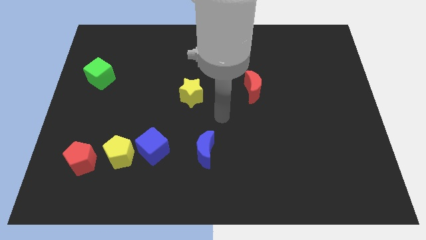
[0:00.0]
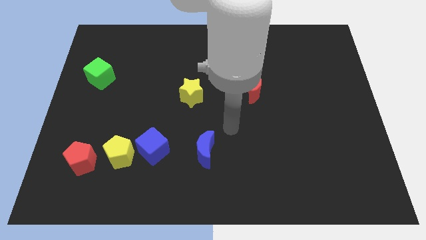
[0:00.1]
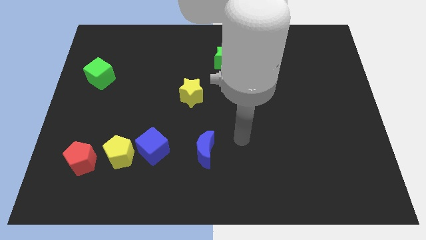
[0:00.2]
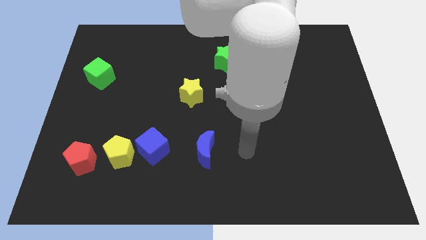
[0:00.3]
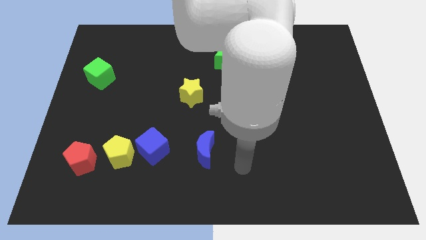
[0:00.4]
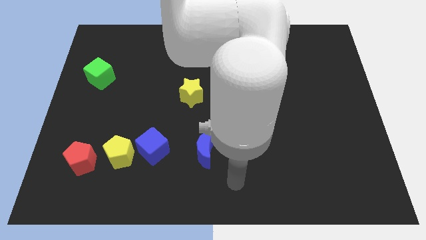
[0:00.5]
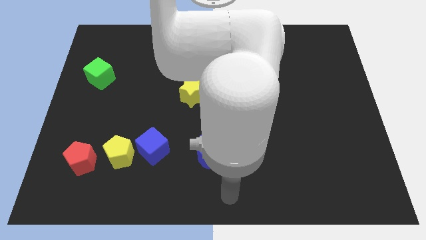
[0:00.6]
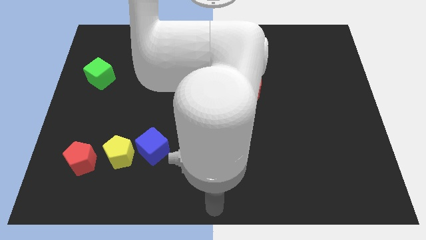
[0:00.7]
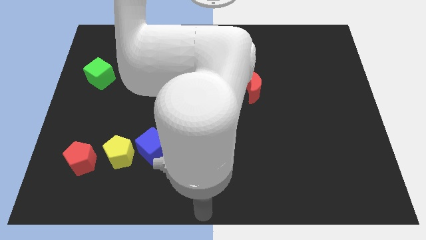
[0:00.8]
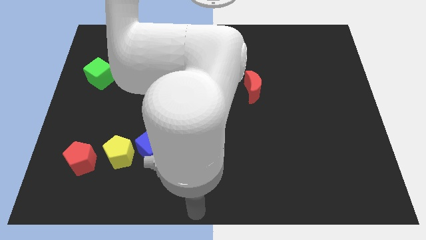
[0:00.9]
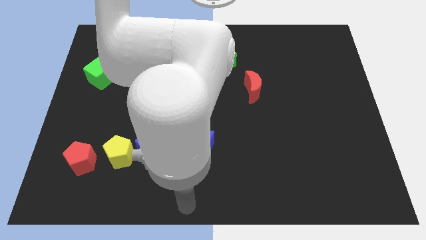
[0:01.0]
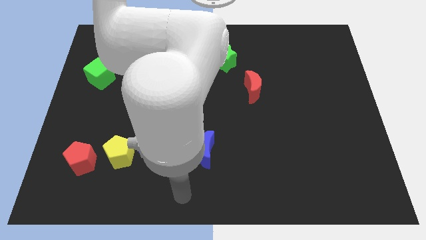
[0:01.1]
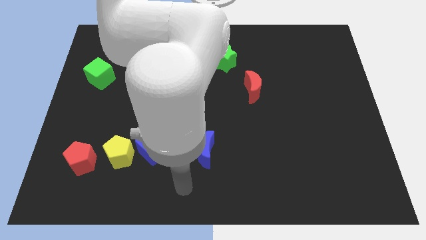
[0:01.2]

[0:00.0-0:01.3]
move your arm to the bottom center of the board

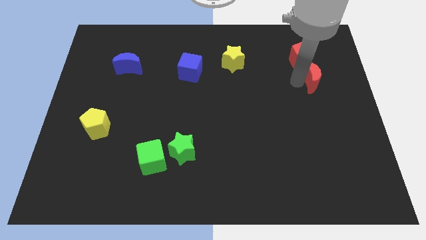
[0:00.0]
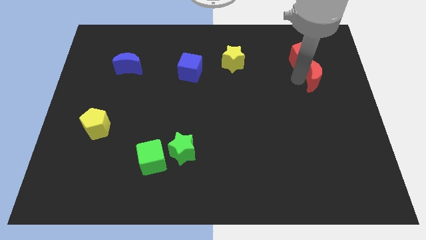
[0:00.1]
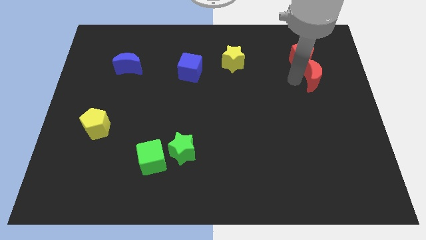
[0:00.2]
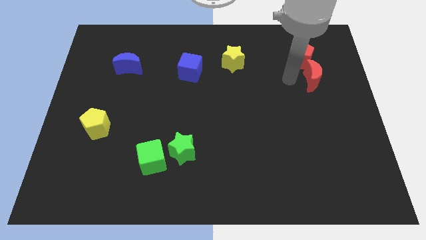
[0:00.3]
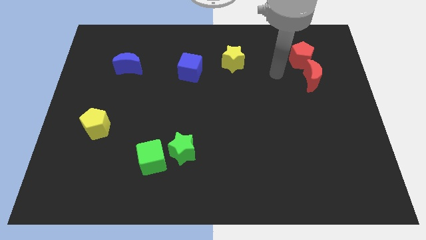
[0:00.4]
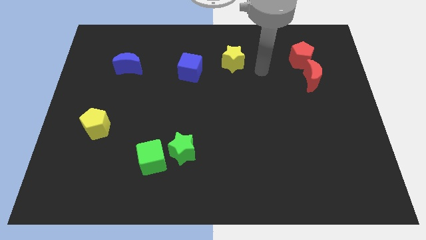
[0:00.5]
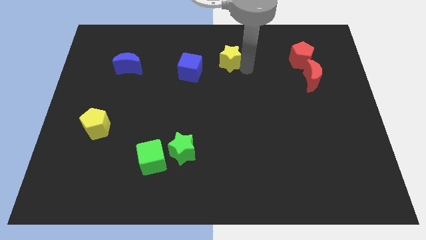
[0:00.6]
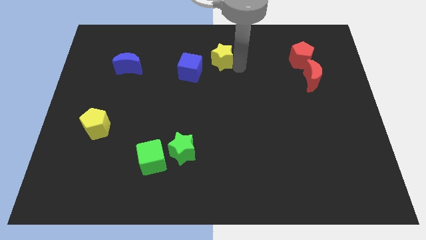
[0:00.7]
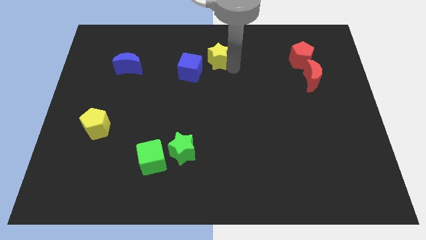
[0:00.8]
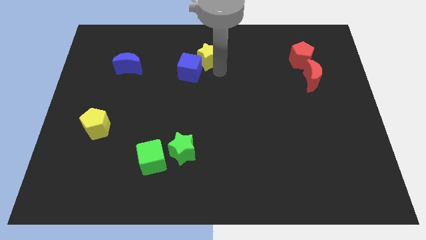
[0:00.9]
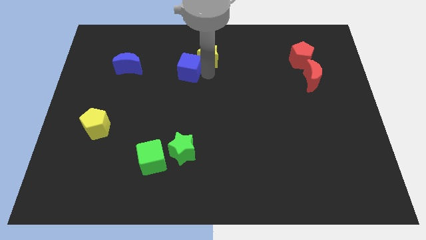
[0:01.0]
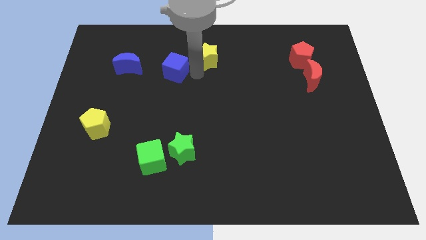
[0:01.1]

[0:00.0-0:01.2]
place the yellow star above the blue cube

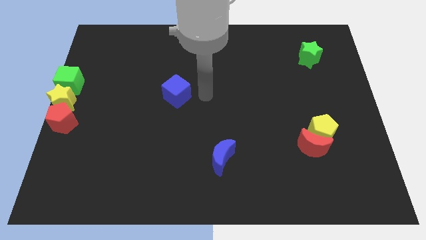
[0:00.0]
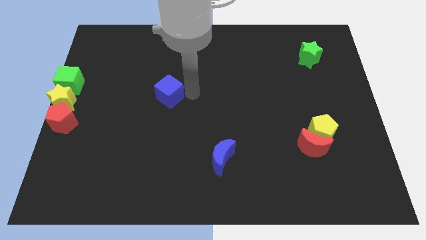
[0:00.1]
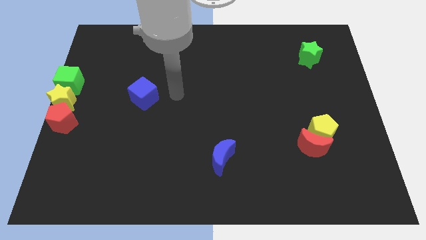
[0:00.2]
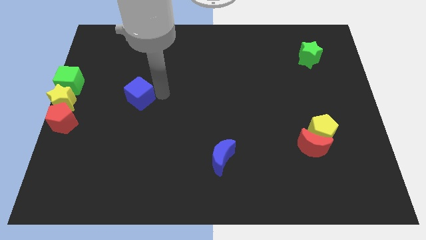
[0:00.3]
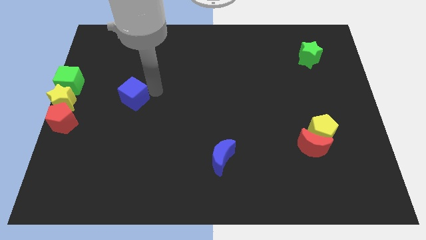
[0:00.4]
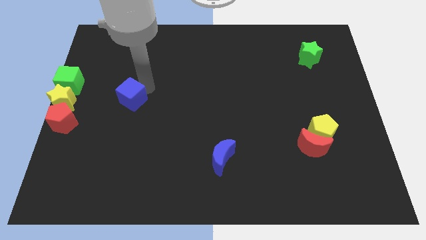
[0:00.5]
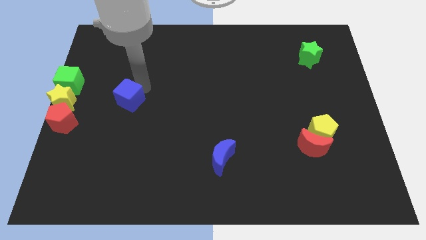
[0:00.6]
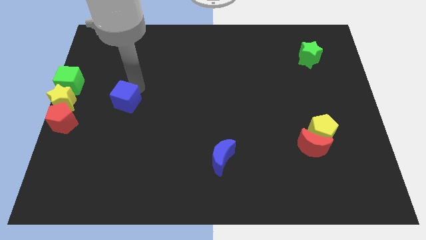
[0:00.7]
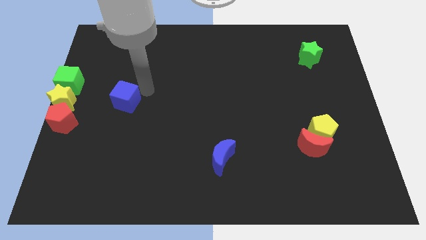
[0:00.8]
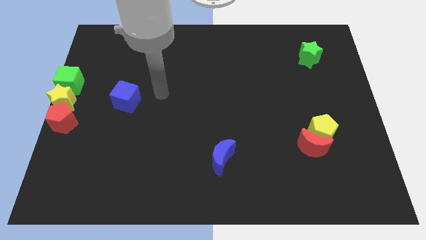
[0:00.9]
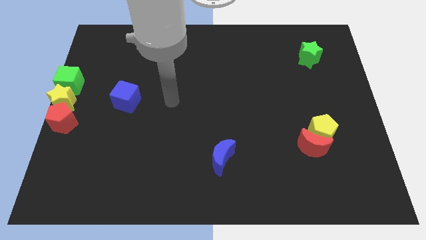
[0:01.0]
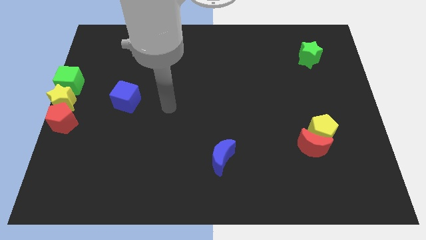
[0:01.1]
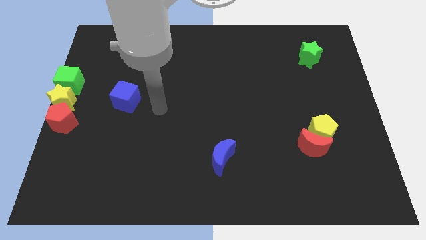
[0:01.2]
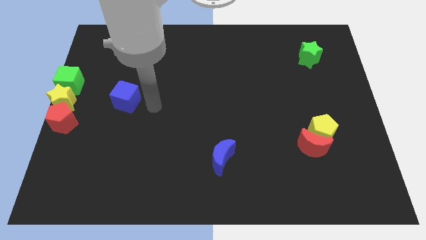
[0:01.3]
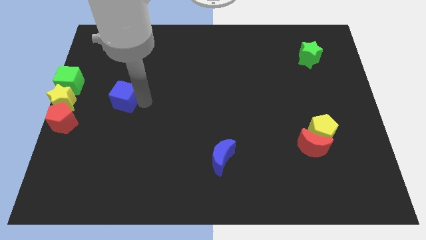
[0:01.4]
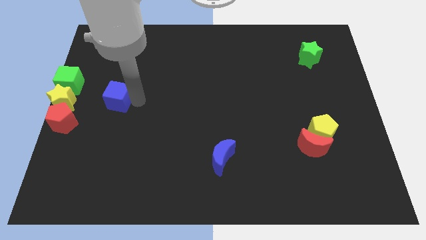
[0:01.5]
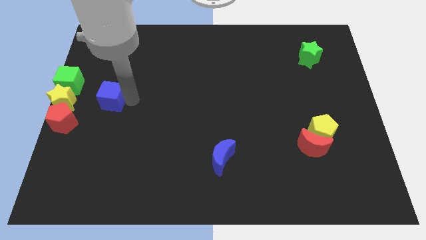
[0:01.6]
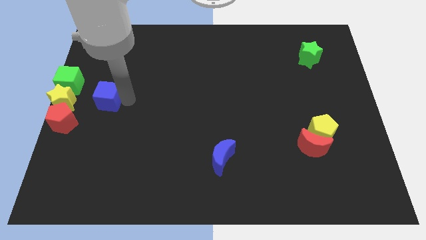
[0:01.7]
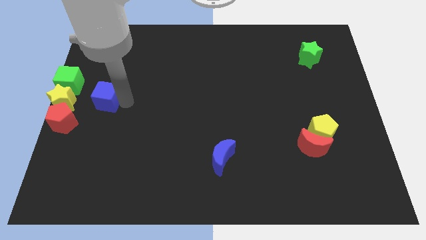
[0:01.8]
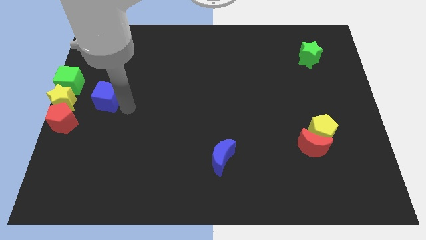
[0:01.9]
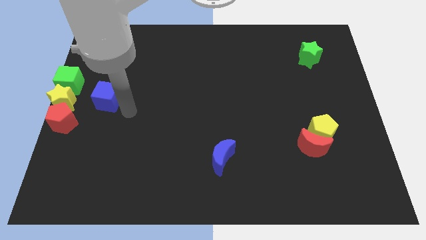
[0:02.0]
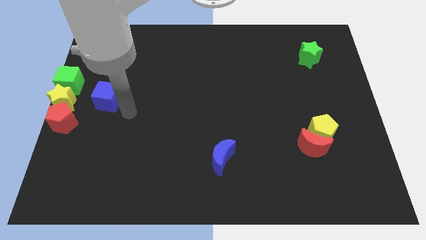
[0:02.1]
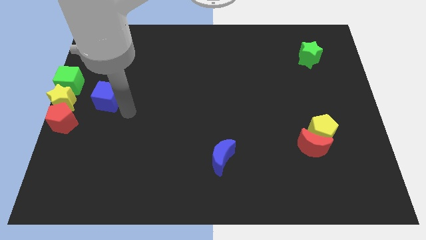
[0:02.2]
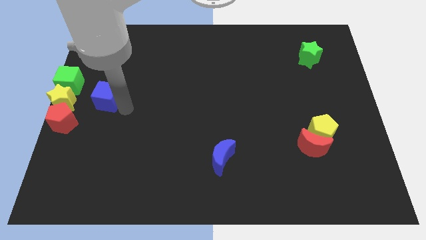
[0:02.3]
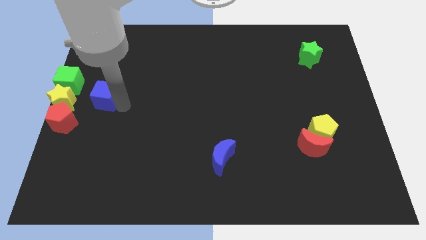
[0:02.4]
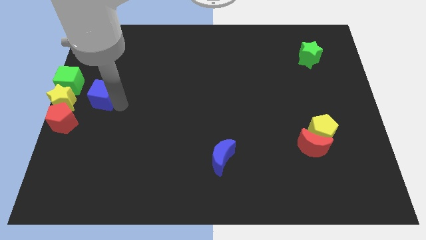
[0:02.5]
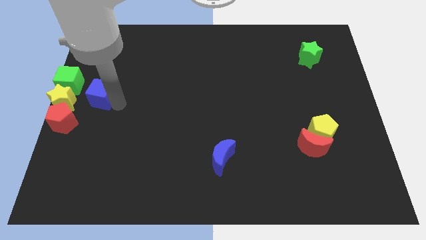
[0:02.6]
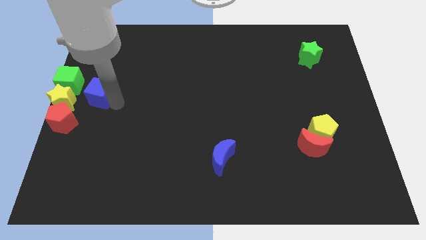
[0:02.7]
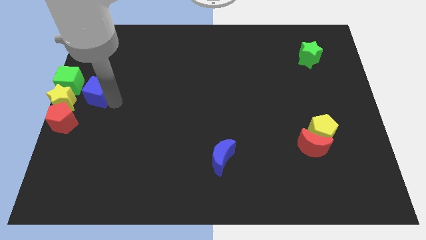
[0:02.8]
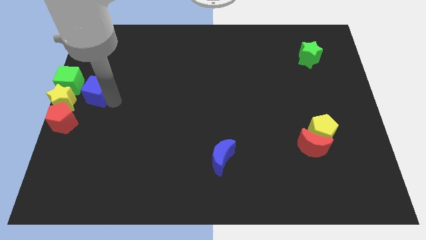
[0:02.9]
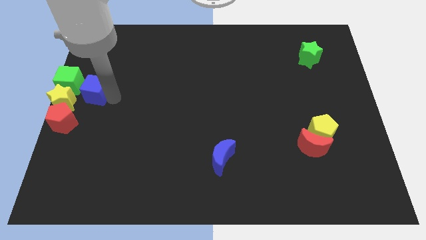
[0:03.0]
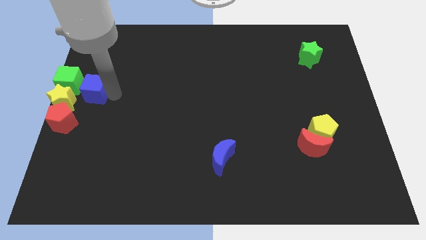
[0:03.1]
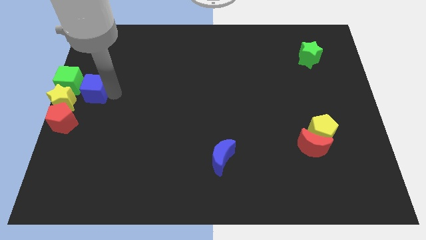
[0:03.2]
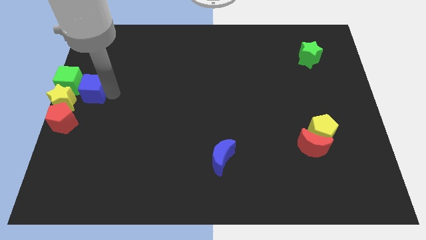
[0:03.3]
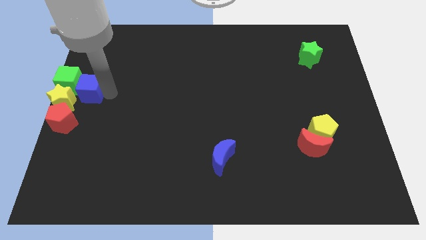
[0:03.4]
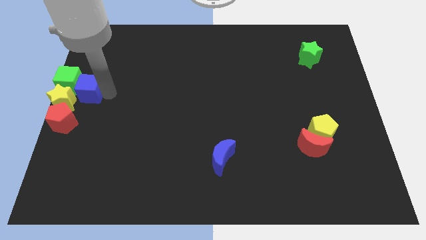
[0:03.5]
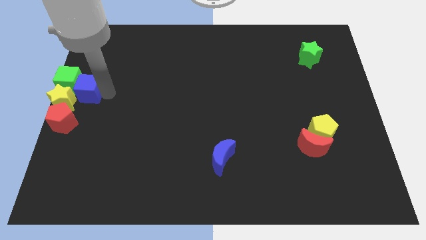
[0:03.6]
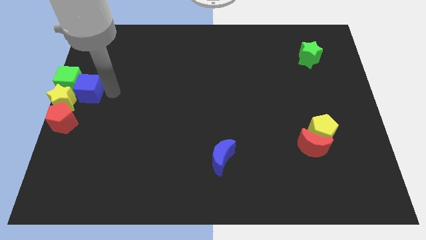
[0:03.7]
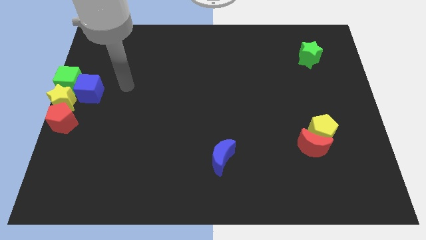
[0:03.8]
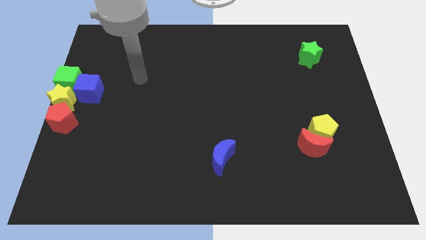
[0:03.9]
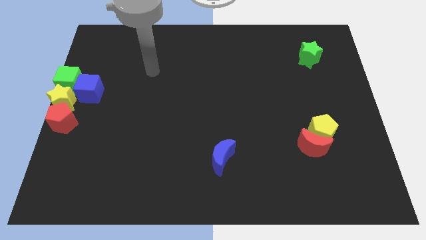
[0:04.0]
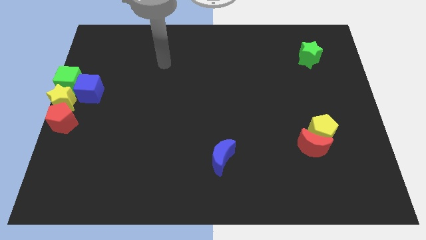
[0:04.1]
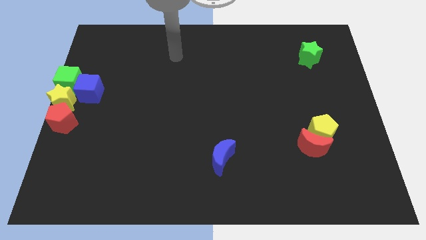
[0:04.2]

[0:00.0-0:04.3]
place the blue cube right to the green cube

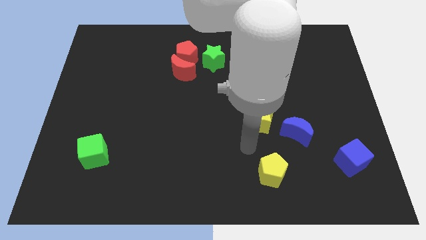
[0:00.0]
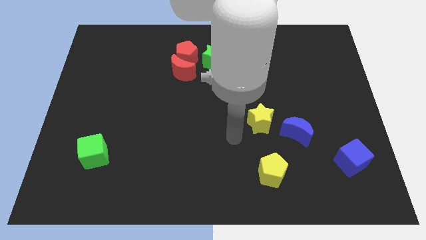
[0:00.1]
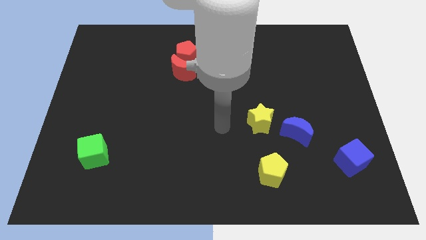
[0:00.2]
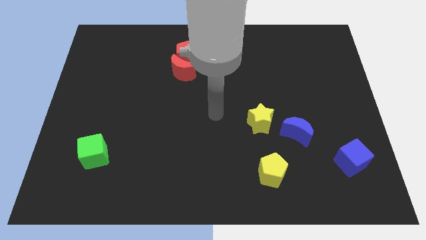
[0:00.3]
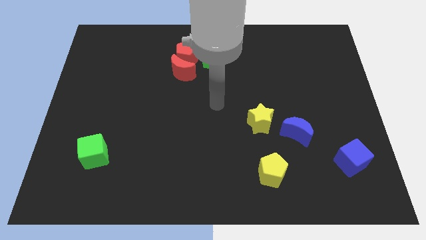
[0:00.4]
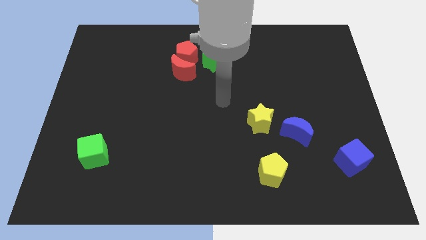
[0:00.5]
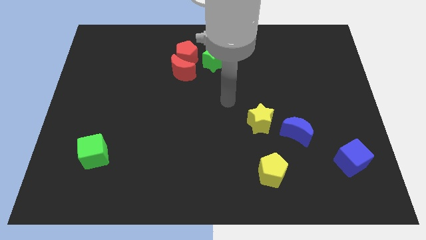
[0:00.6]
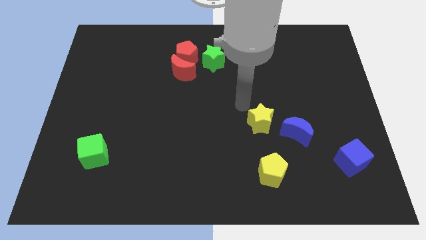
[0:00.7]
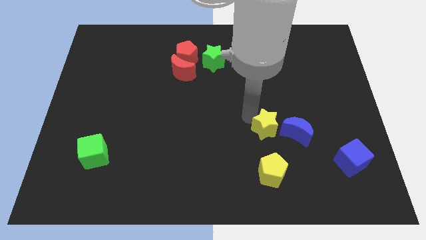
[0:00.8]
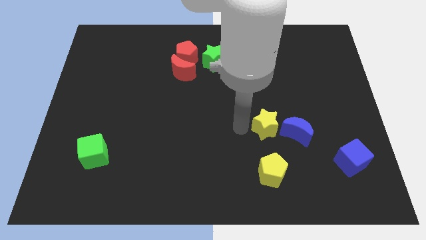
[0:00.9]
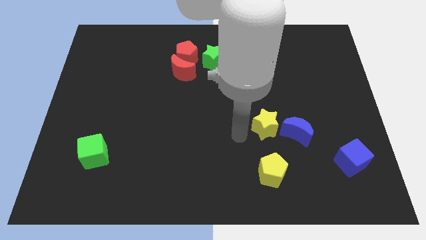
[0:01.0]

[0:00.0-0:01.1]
slide the yellow star close to the blue moon

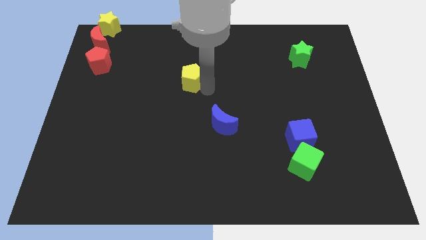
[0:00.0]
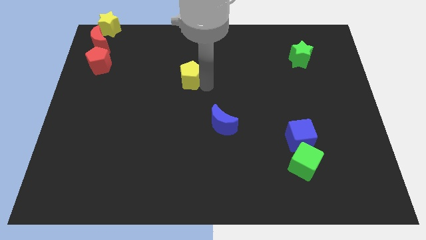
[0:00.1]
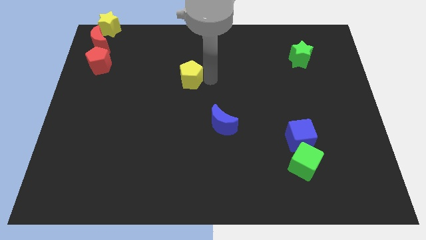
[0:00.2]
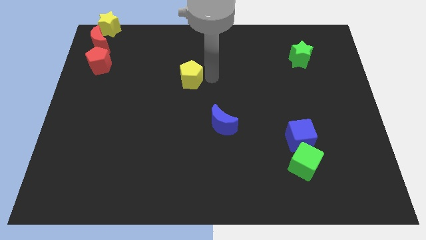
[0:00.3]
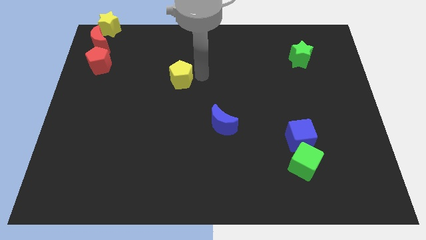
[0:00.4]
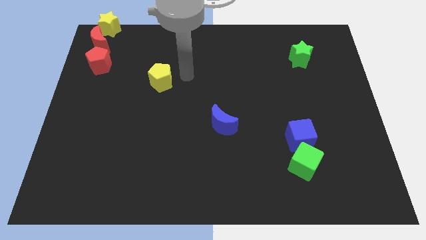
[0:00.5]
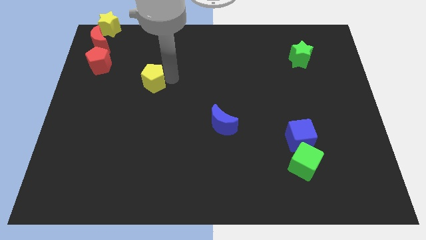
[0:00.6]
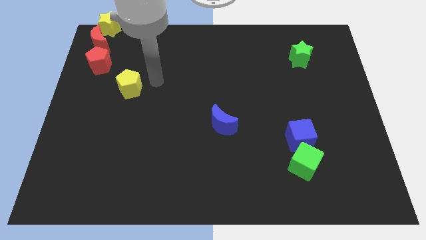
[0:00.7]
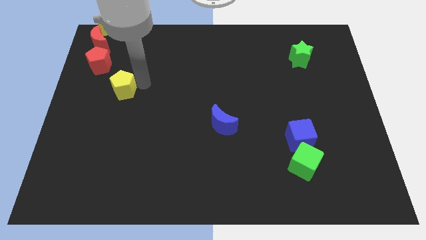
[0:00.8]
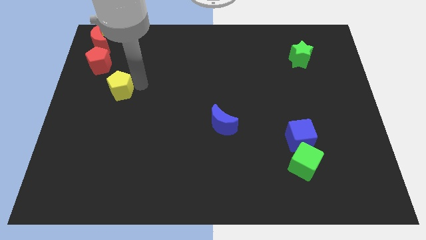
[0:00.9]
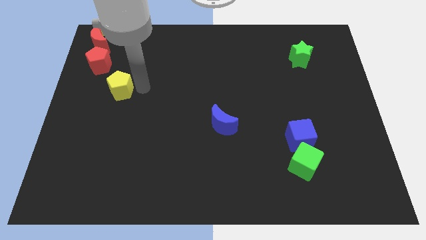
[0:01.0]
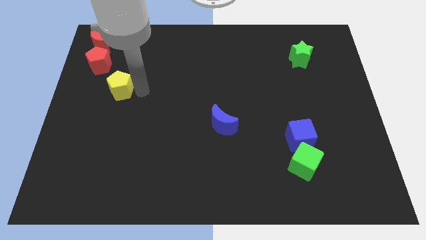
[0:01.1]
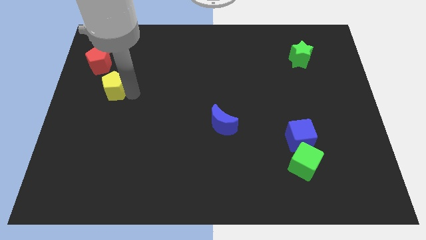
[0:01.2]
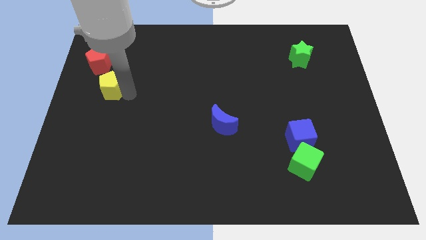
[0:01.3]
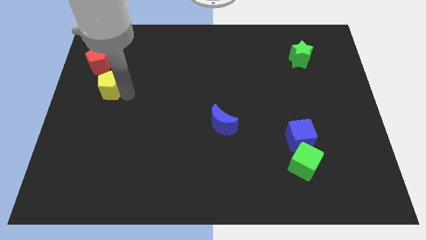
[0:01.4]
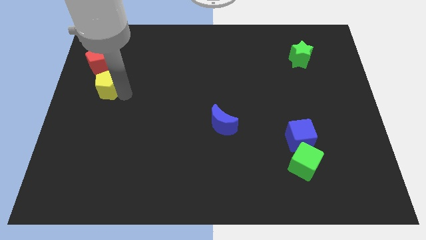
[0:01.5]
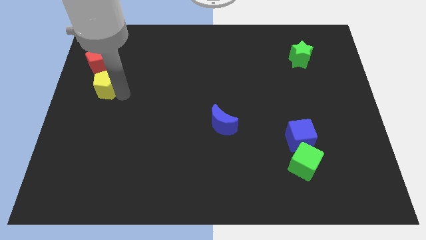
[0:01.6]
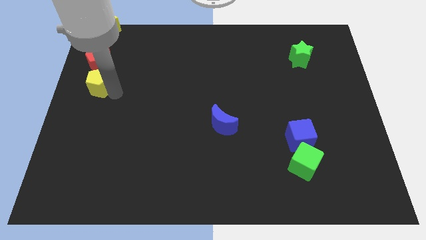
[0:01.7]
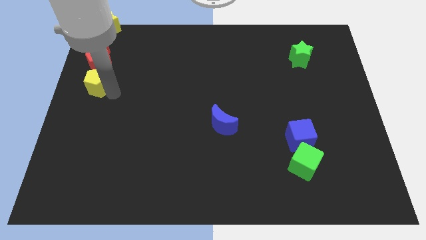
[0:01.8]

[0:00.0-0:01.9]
place yellow pentagon below red pentagon
